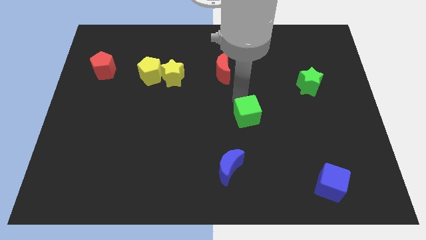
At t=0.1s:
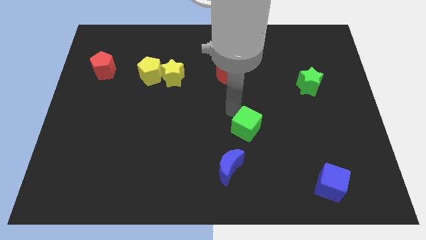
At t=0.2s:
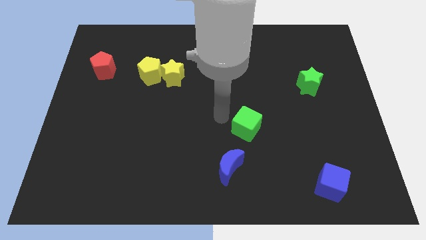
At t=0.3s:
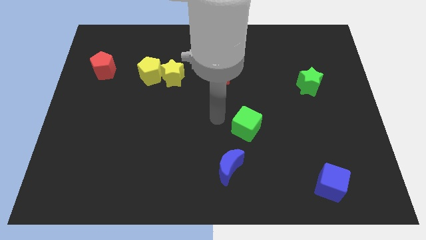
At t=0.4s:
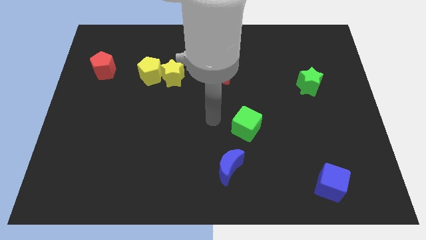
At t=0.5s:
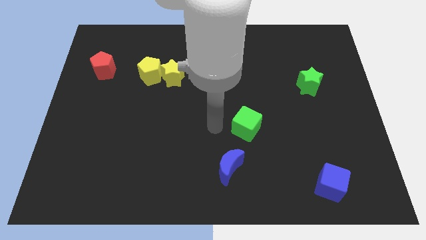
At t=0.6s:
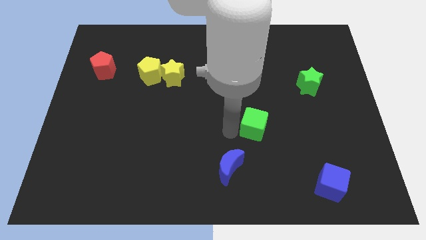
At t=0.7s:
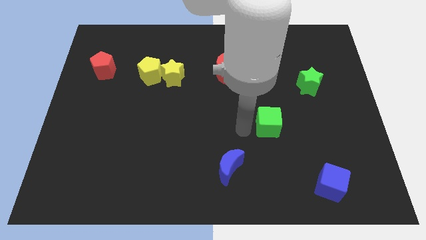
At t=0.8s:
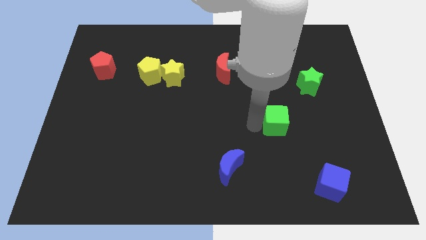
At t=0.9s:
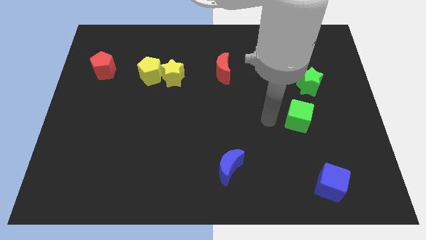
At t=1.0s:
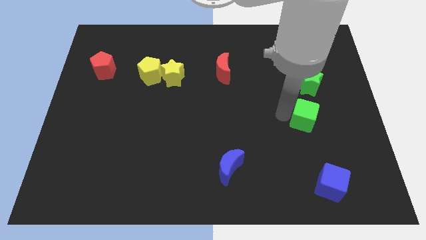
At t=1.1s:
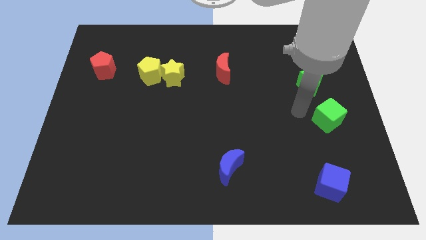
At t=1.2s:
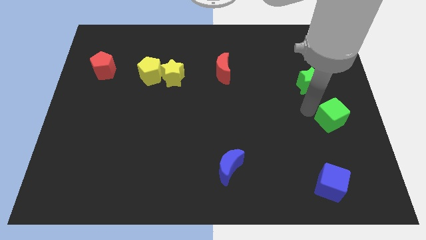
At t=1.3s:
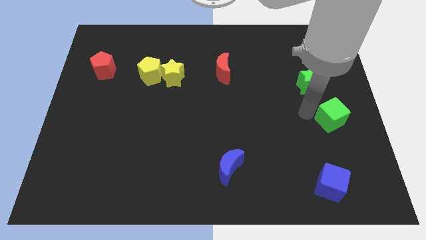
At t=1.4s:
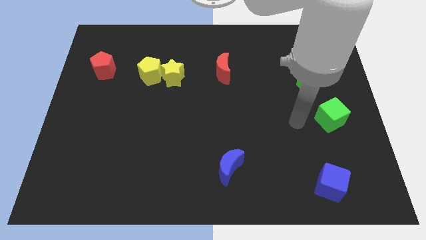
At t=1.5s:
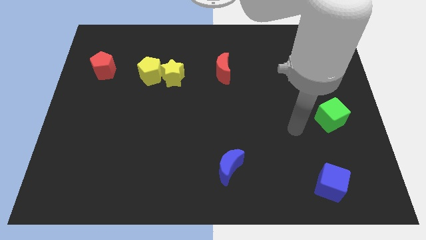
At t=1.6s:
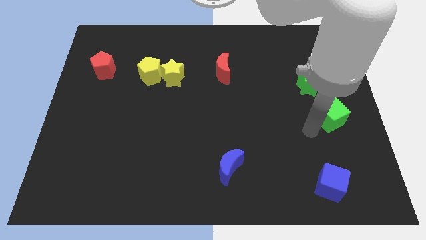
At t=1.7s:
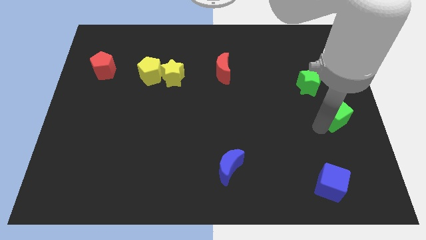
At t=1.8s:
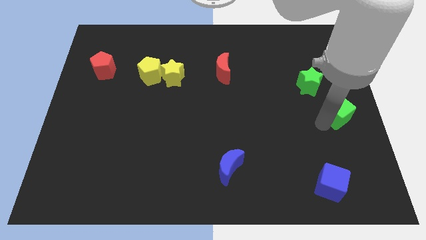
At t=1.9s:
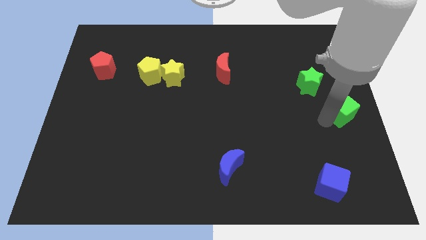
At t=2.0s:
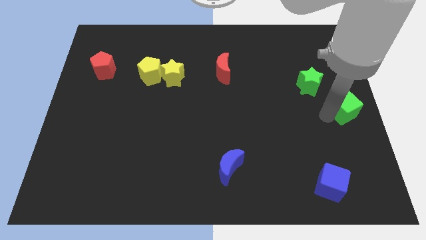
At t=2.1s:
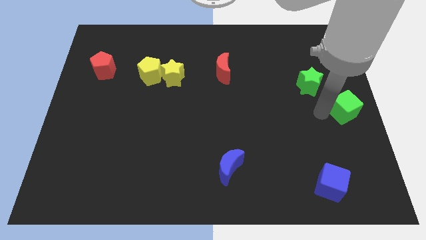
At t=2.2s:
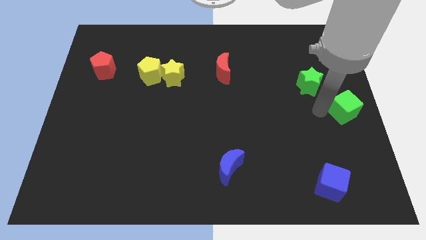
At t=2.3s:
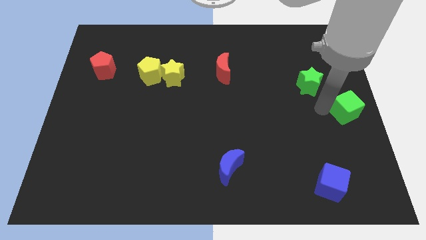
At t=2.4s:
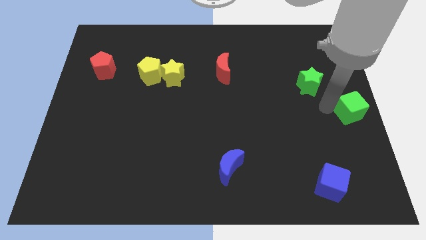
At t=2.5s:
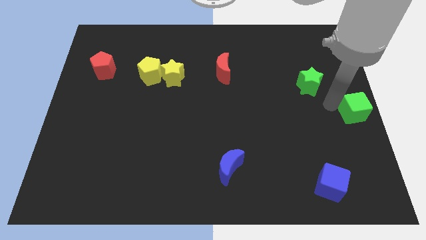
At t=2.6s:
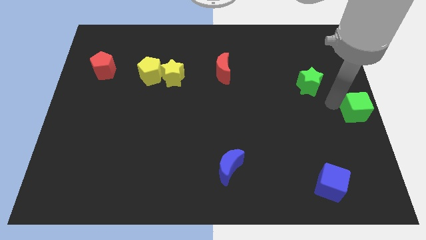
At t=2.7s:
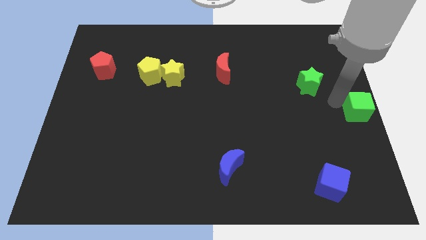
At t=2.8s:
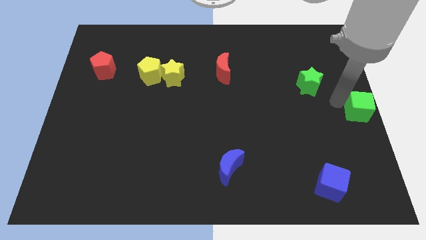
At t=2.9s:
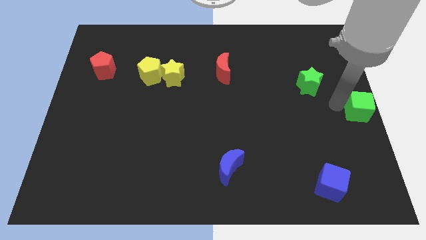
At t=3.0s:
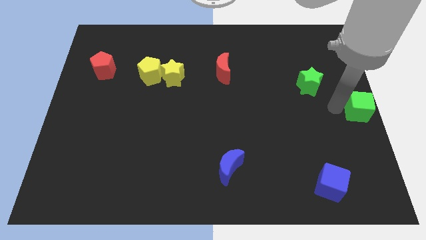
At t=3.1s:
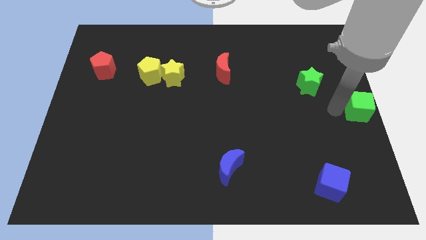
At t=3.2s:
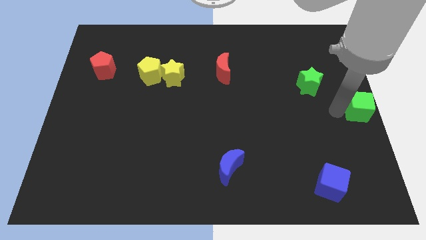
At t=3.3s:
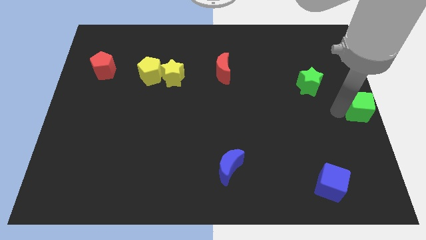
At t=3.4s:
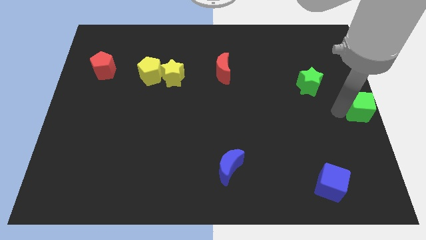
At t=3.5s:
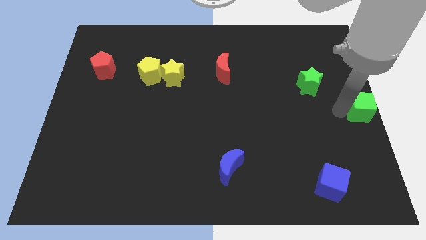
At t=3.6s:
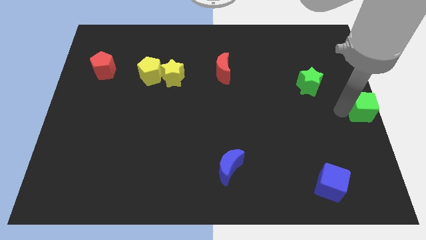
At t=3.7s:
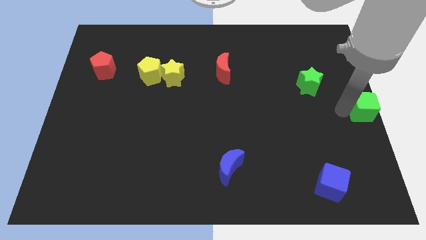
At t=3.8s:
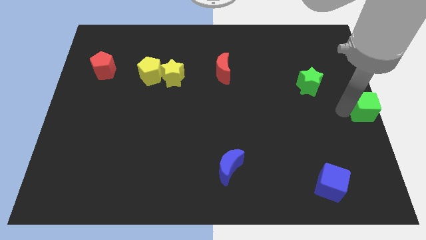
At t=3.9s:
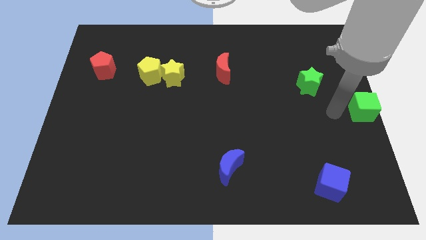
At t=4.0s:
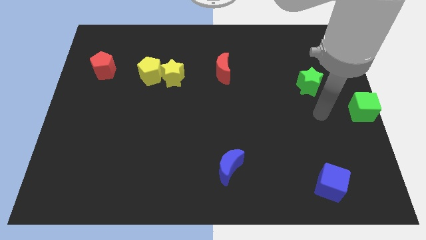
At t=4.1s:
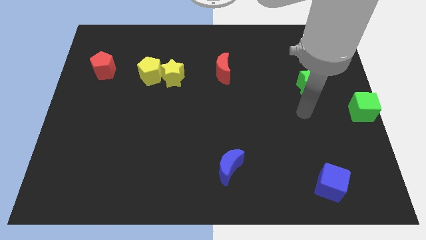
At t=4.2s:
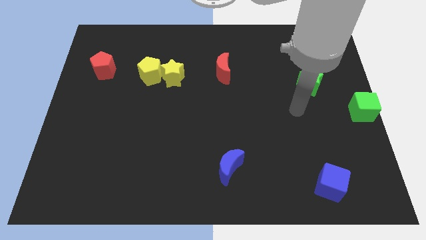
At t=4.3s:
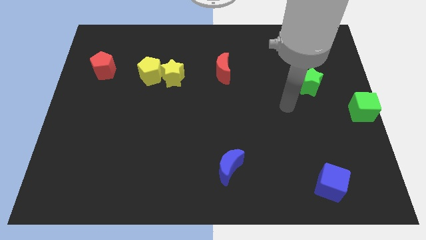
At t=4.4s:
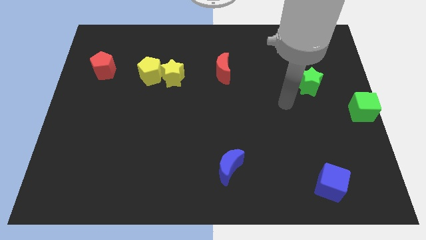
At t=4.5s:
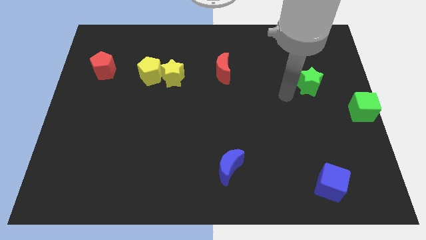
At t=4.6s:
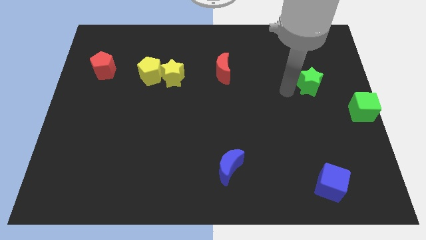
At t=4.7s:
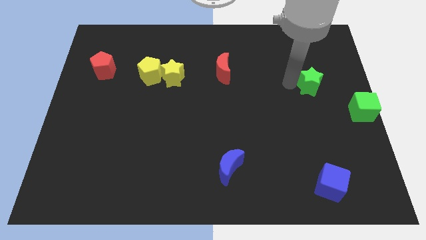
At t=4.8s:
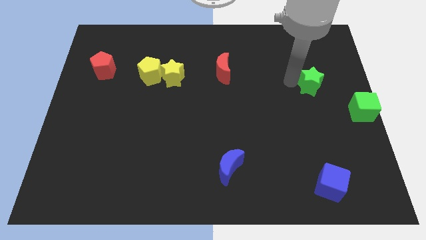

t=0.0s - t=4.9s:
push the green cube to the right center of the board

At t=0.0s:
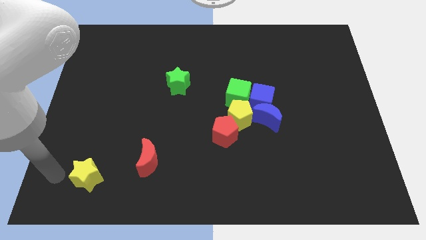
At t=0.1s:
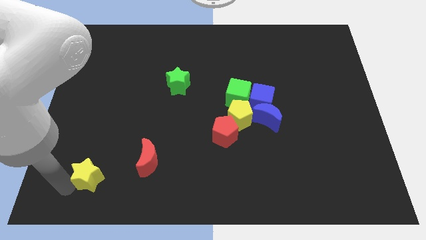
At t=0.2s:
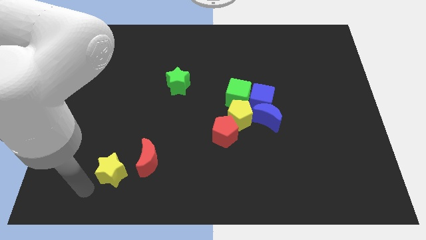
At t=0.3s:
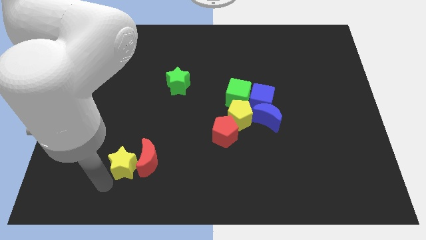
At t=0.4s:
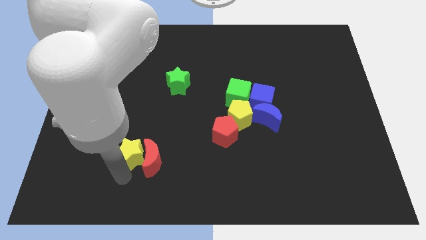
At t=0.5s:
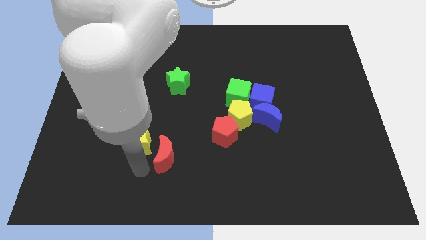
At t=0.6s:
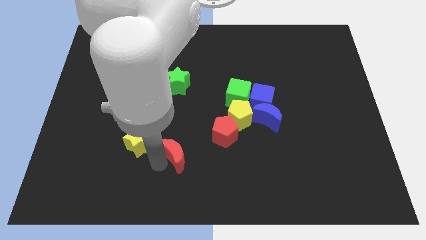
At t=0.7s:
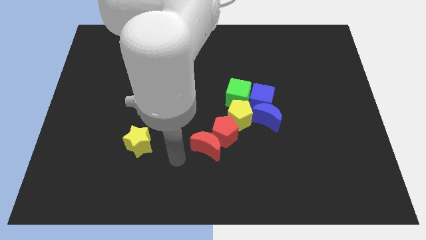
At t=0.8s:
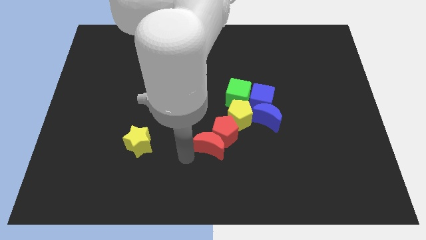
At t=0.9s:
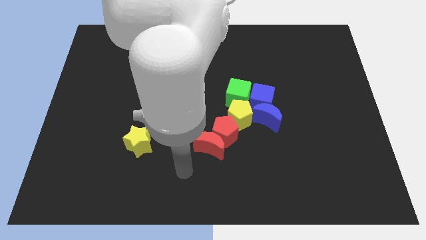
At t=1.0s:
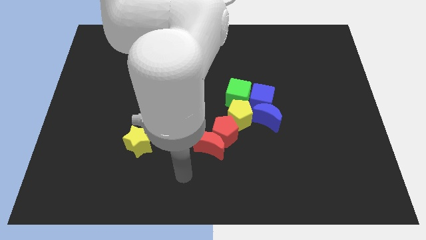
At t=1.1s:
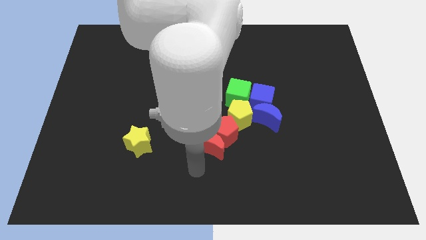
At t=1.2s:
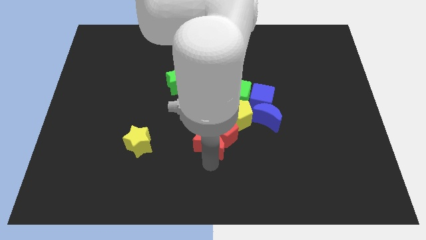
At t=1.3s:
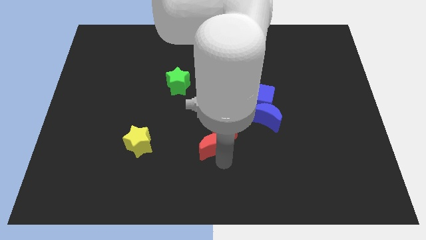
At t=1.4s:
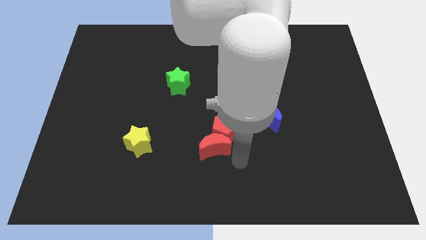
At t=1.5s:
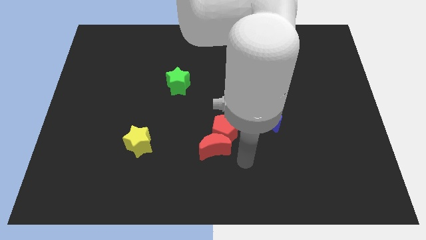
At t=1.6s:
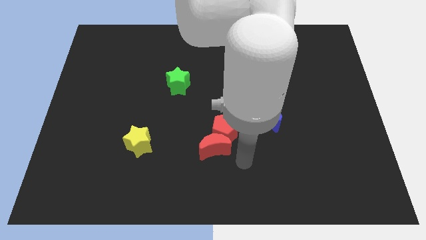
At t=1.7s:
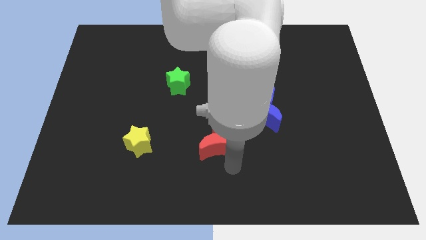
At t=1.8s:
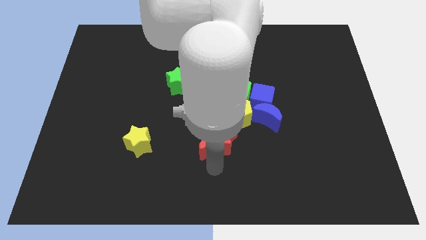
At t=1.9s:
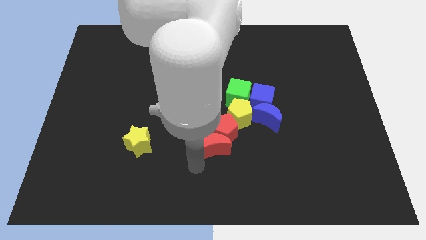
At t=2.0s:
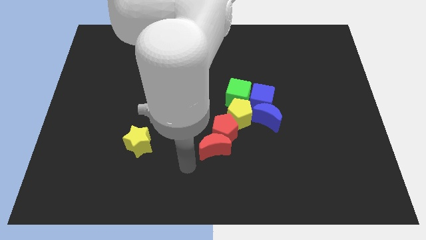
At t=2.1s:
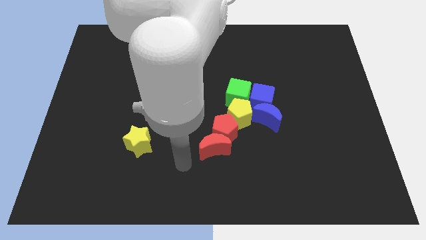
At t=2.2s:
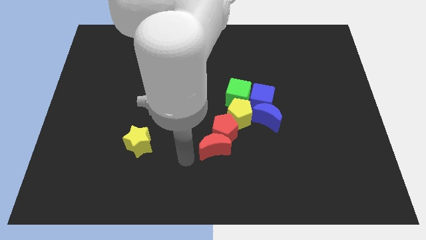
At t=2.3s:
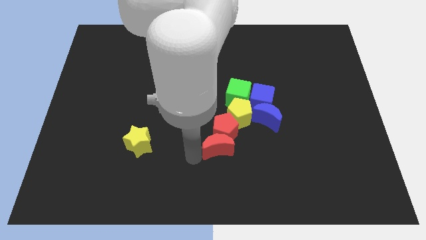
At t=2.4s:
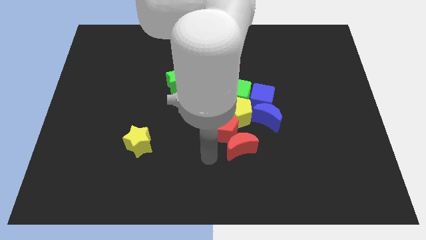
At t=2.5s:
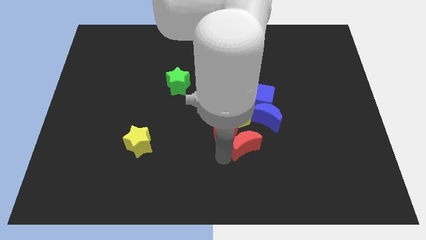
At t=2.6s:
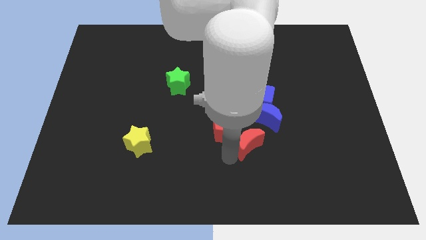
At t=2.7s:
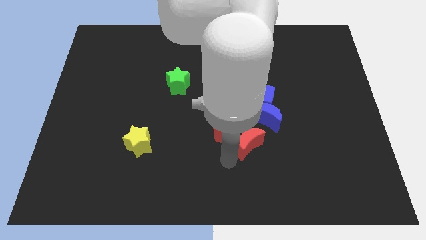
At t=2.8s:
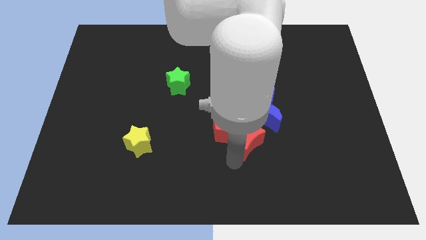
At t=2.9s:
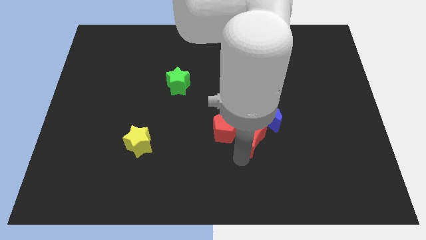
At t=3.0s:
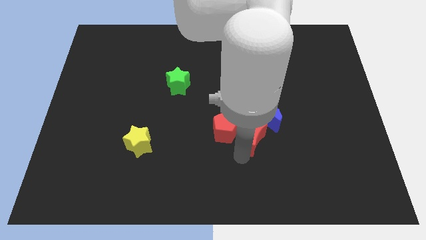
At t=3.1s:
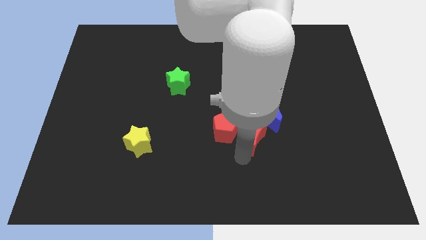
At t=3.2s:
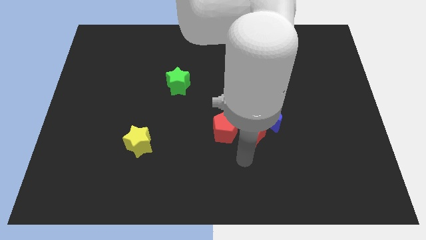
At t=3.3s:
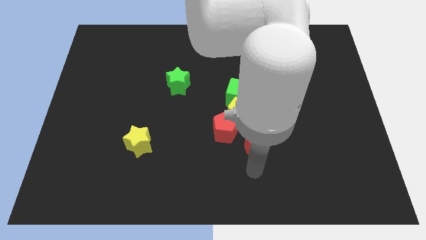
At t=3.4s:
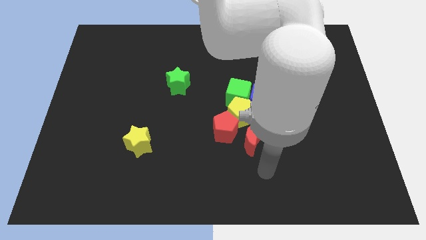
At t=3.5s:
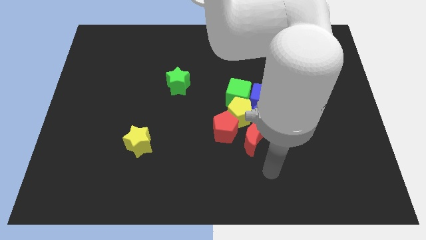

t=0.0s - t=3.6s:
place the red moon to the right of the yellow star

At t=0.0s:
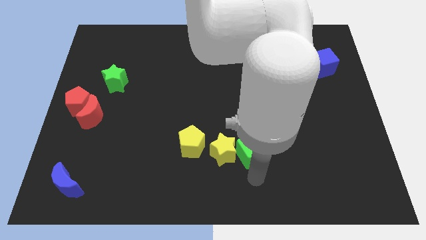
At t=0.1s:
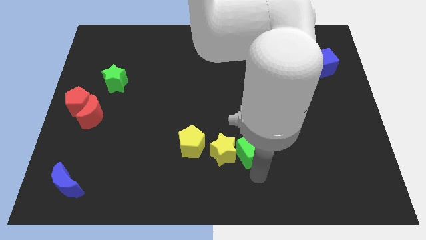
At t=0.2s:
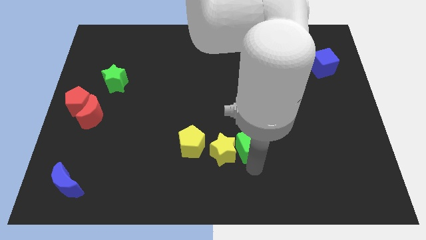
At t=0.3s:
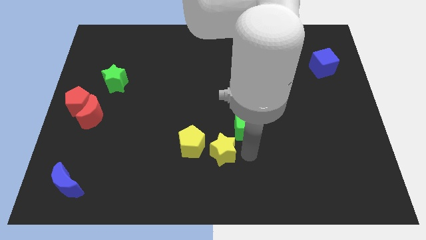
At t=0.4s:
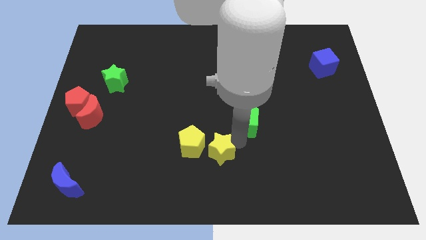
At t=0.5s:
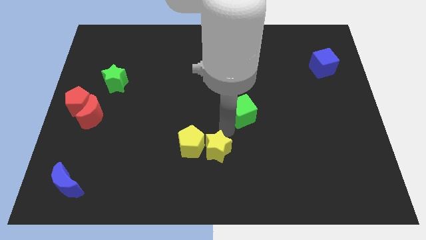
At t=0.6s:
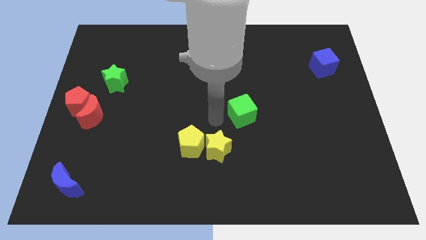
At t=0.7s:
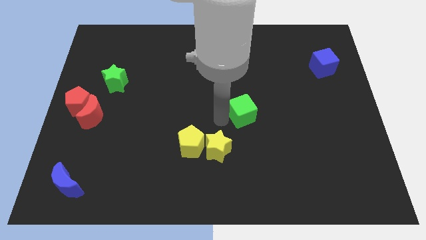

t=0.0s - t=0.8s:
separate green cube from yellow star
